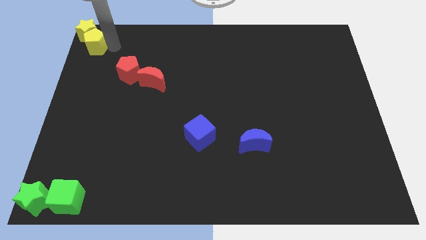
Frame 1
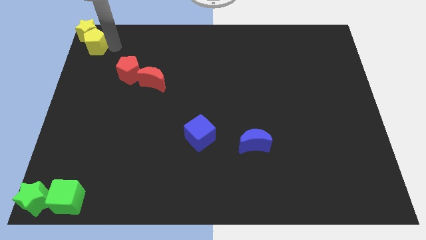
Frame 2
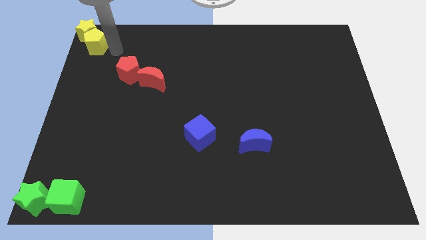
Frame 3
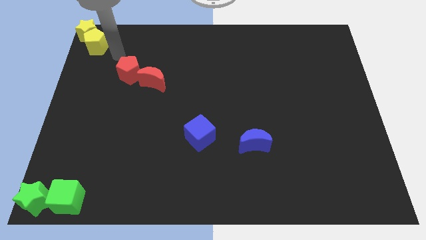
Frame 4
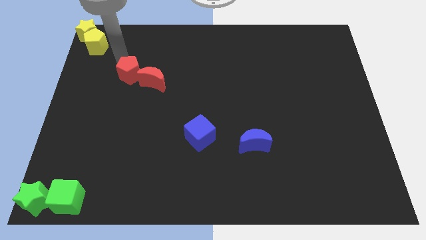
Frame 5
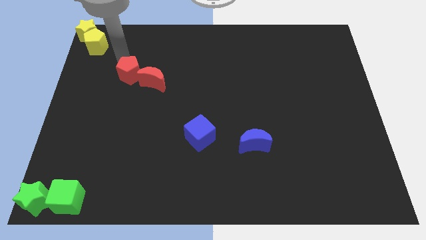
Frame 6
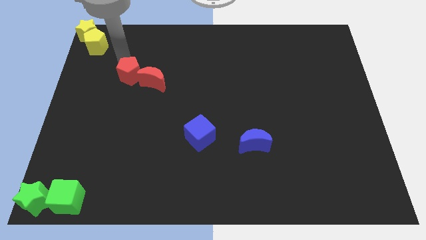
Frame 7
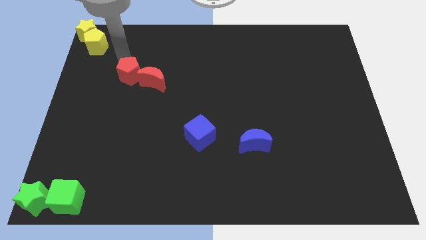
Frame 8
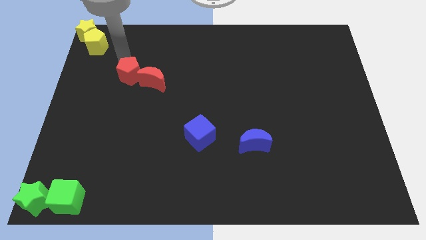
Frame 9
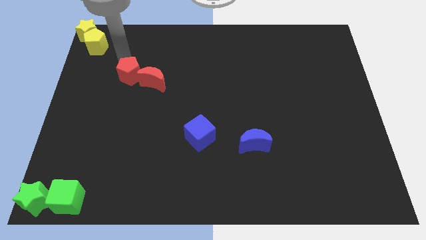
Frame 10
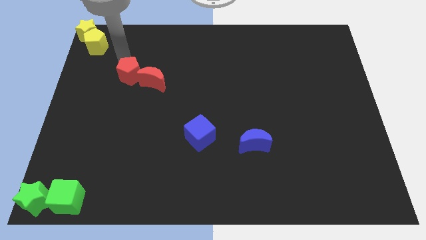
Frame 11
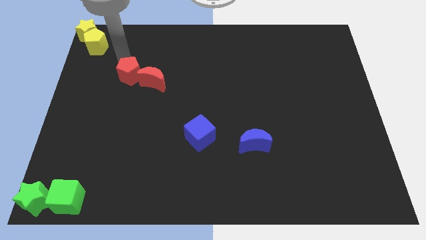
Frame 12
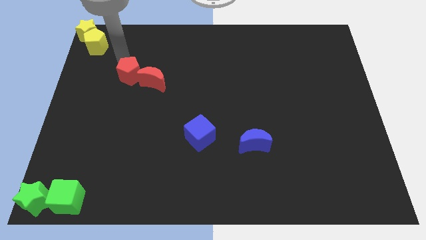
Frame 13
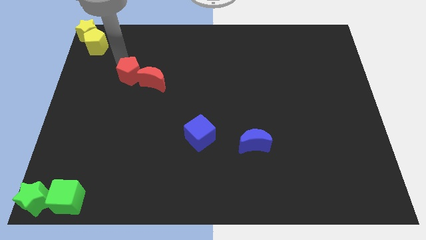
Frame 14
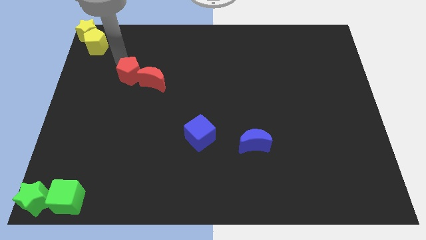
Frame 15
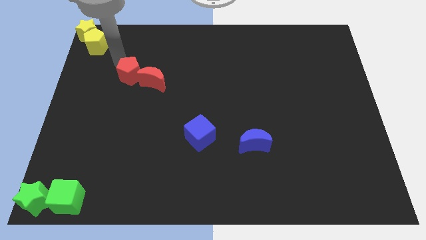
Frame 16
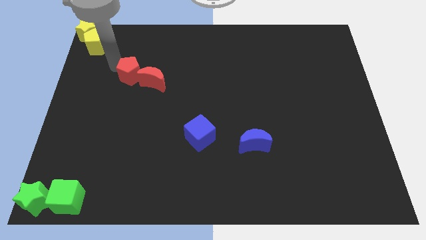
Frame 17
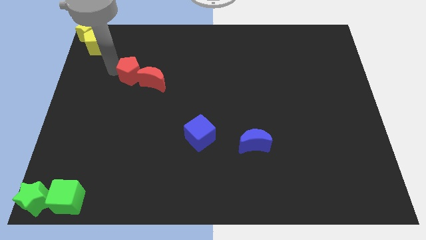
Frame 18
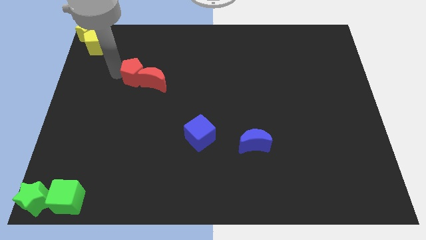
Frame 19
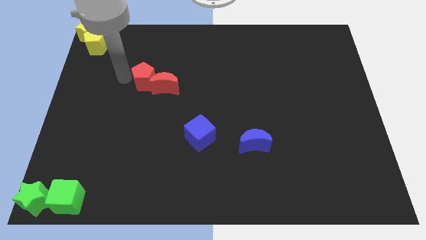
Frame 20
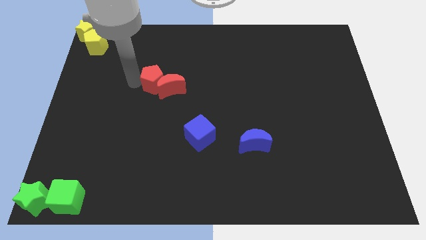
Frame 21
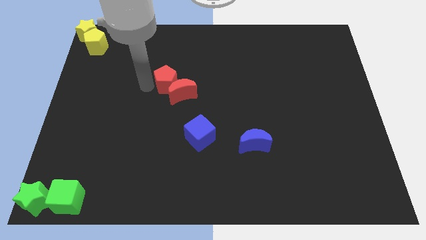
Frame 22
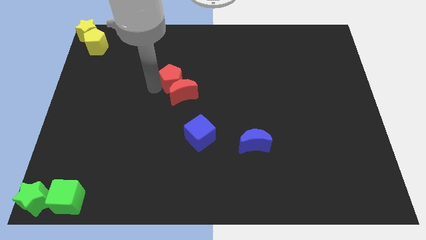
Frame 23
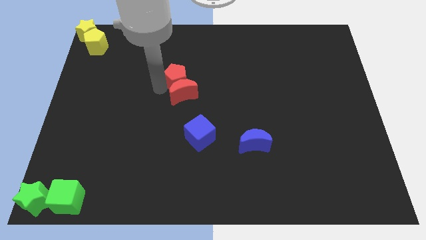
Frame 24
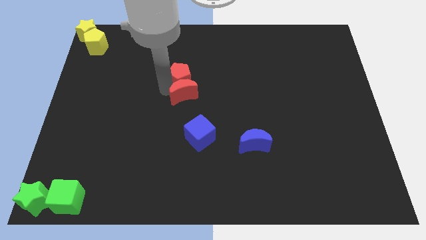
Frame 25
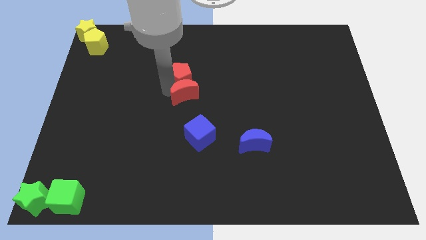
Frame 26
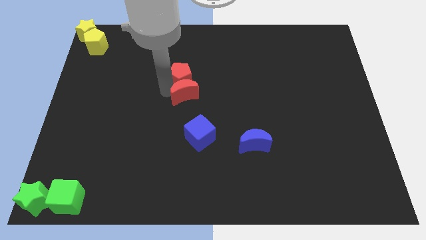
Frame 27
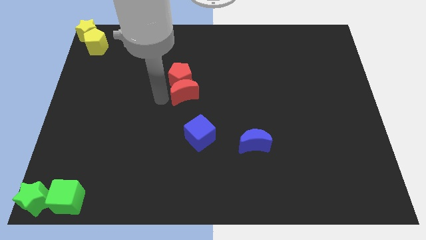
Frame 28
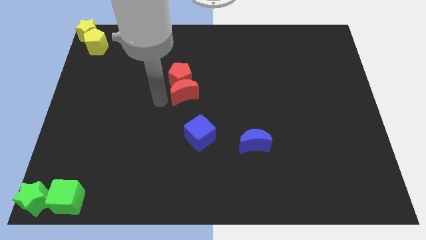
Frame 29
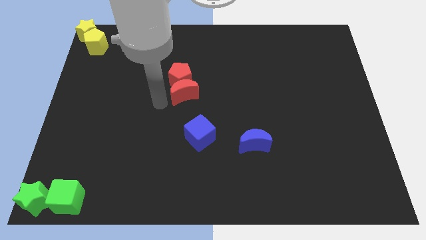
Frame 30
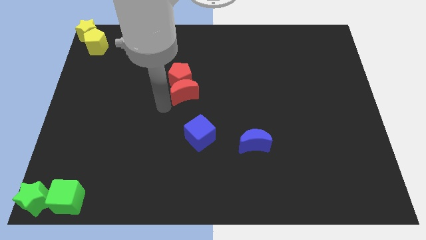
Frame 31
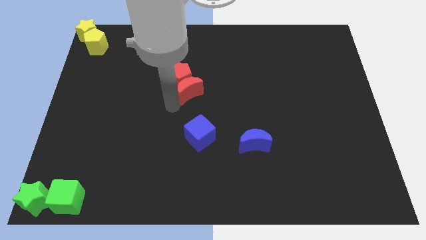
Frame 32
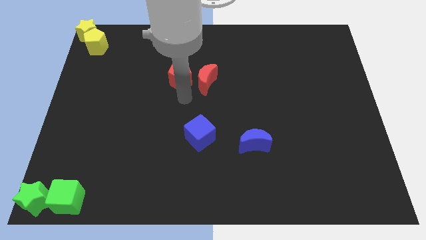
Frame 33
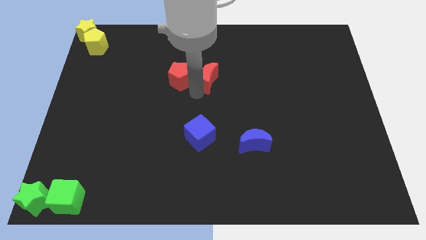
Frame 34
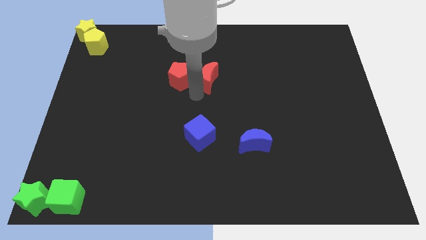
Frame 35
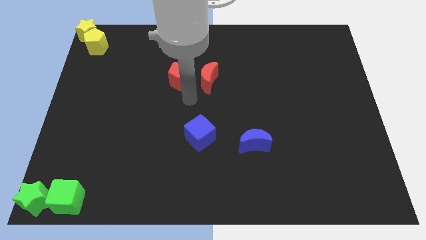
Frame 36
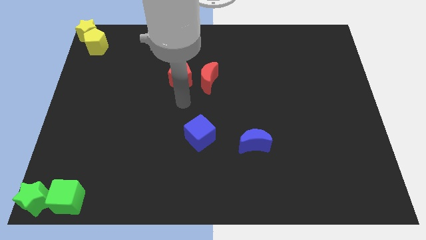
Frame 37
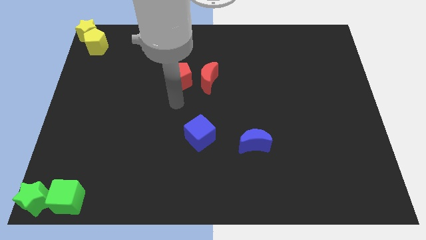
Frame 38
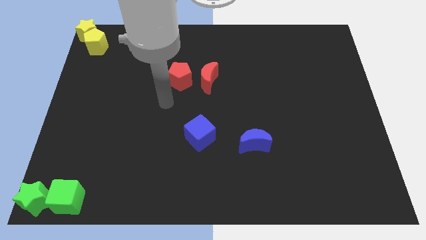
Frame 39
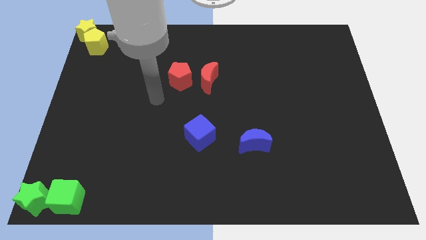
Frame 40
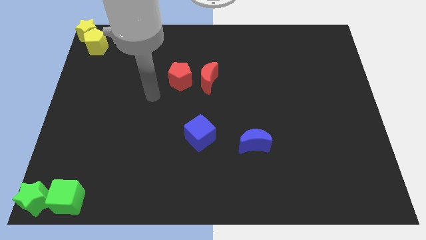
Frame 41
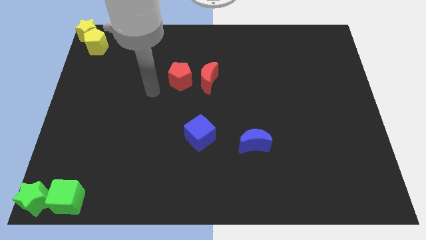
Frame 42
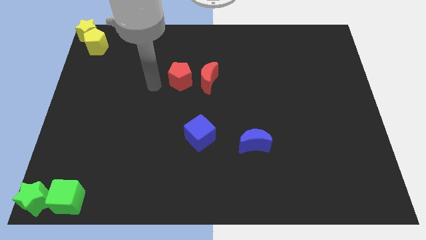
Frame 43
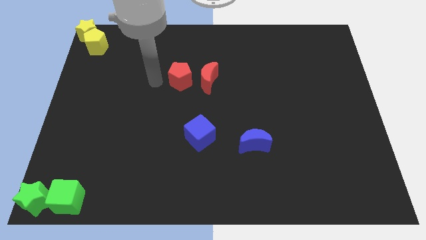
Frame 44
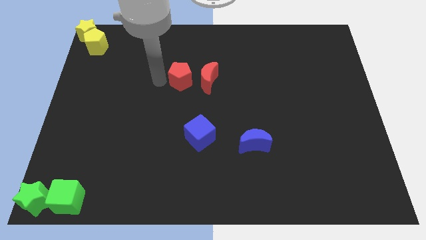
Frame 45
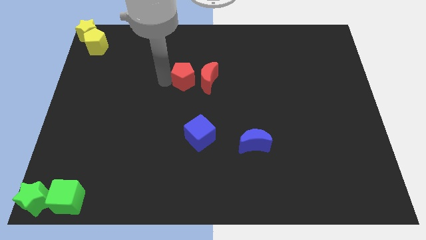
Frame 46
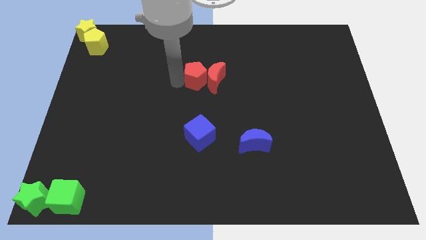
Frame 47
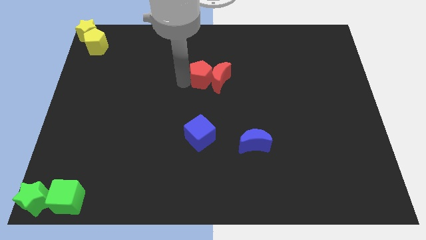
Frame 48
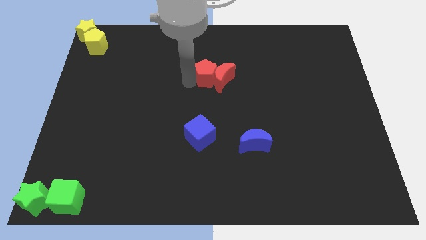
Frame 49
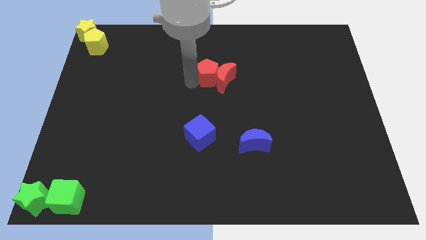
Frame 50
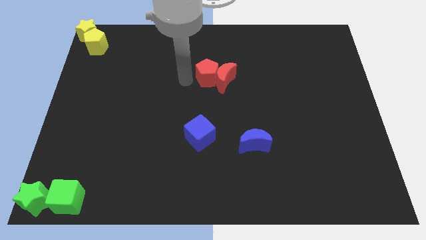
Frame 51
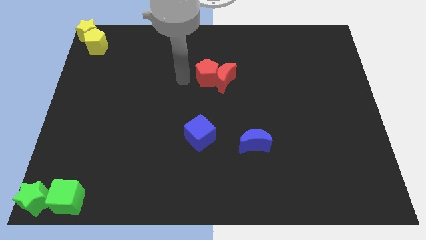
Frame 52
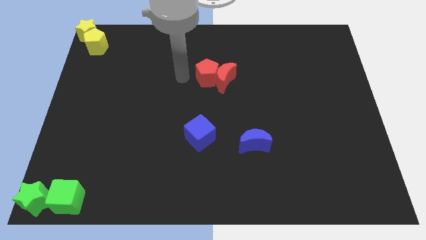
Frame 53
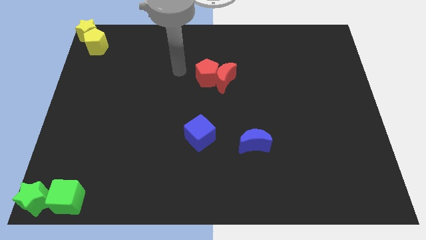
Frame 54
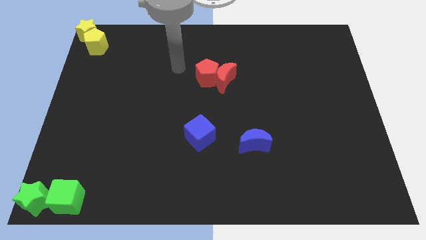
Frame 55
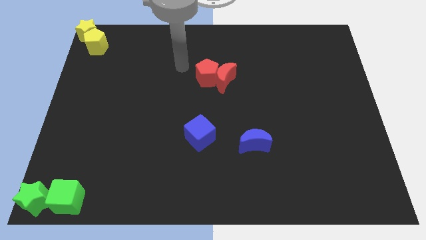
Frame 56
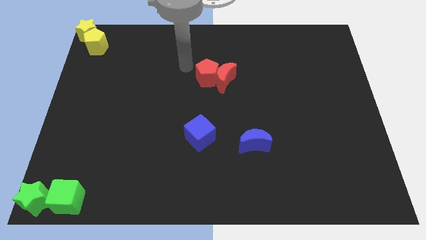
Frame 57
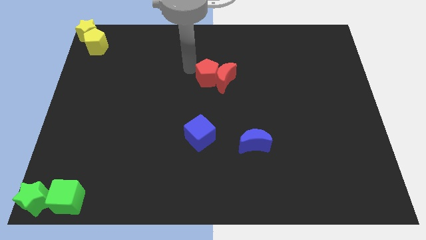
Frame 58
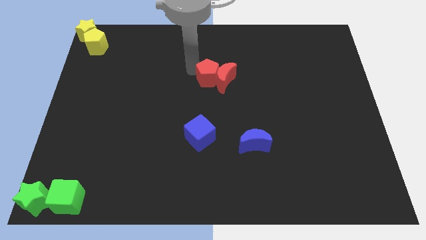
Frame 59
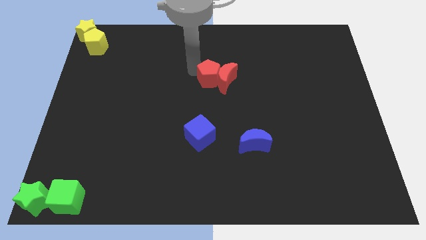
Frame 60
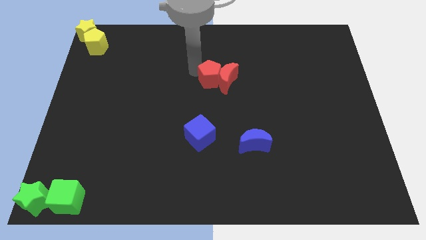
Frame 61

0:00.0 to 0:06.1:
push the red blocks to the center

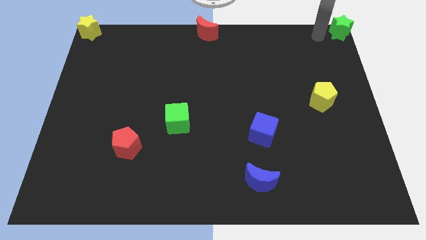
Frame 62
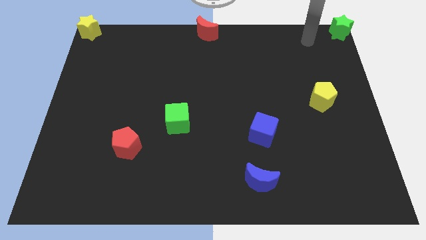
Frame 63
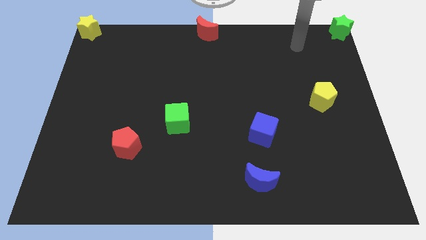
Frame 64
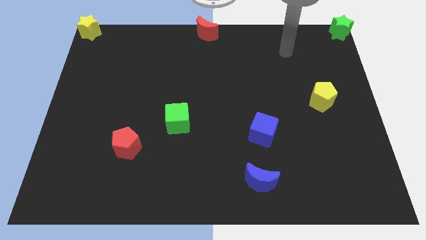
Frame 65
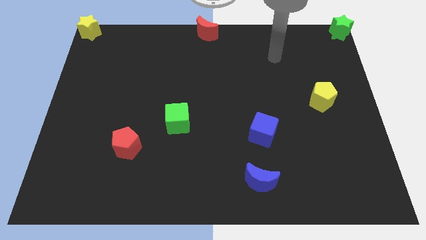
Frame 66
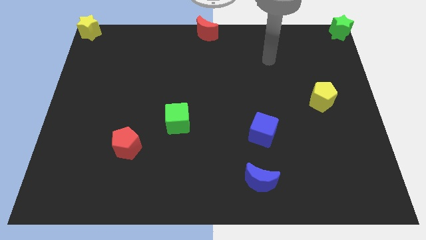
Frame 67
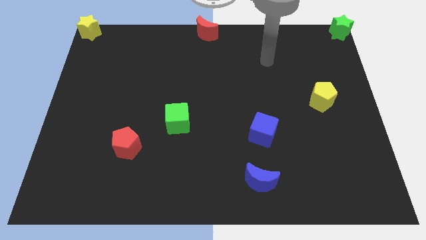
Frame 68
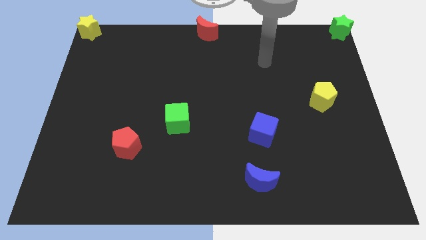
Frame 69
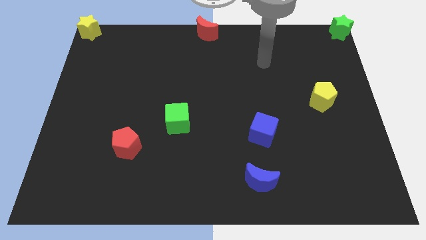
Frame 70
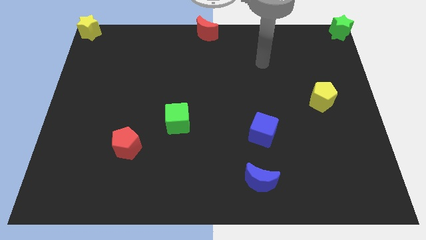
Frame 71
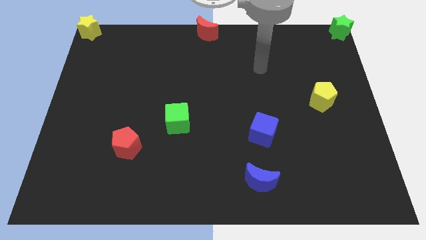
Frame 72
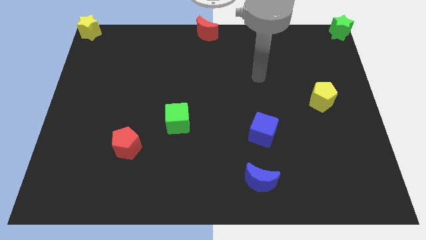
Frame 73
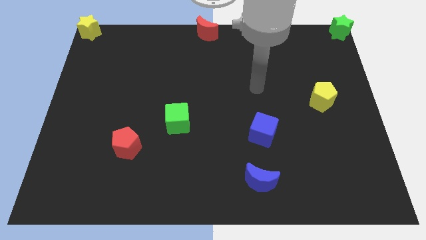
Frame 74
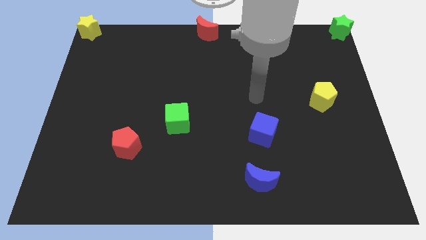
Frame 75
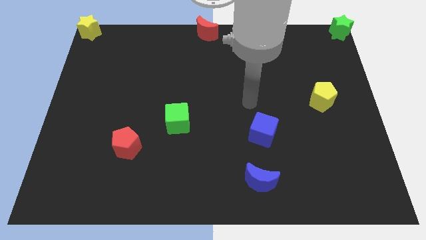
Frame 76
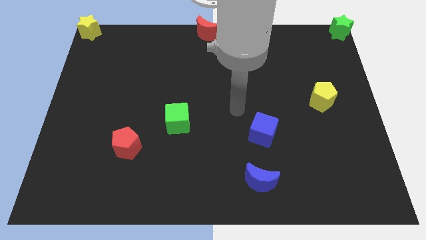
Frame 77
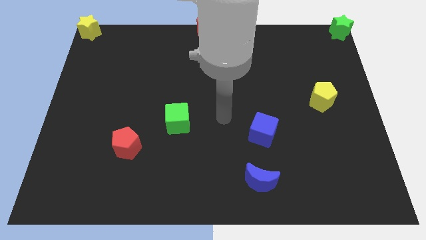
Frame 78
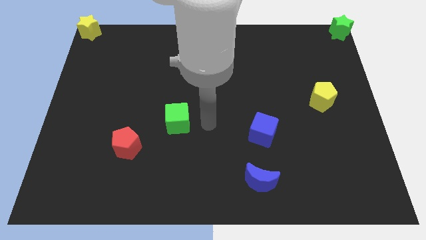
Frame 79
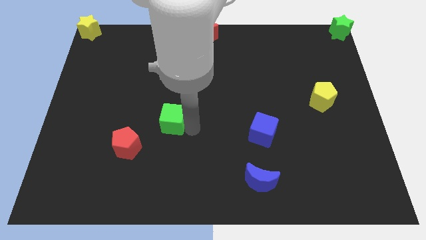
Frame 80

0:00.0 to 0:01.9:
put your arm from top right to diagonally towards the green cube

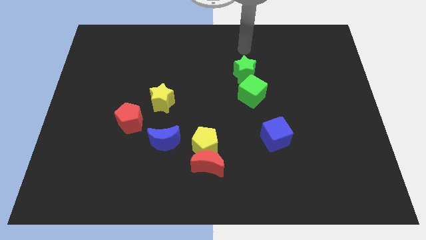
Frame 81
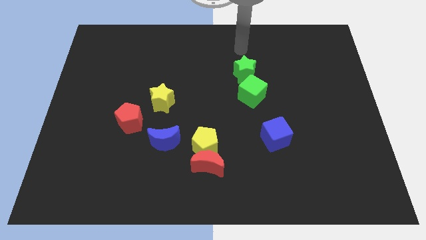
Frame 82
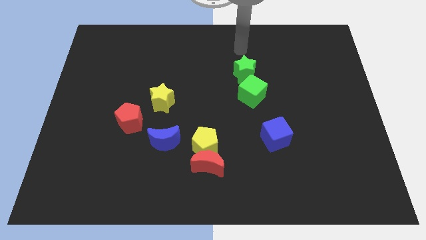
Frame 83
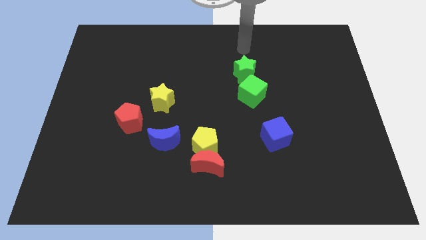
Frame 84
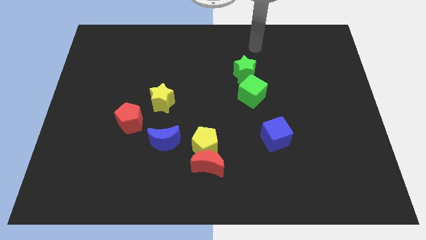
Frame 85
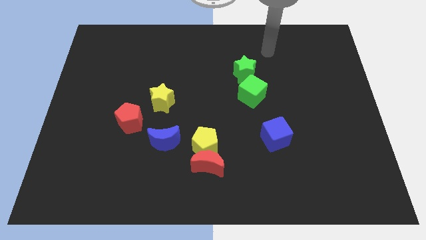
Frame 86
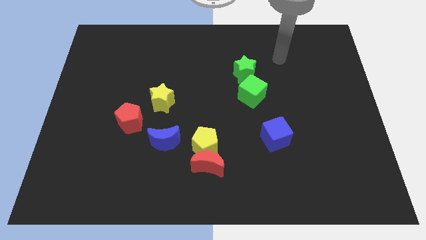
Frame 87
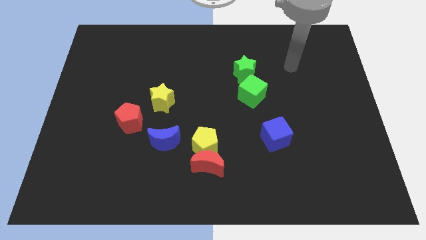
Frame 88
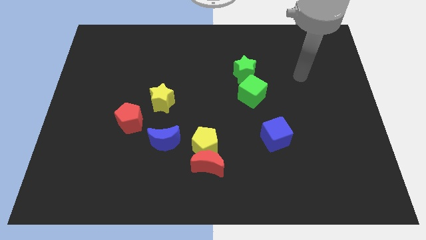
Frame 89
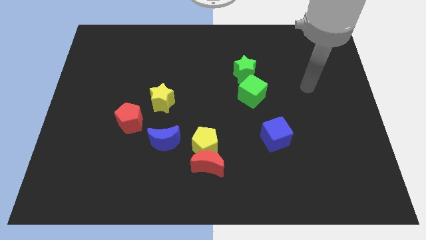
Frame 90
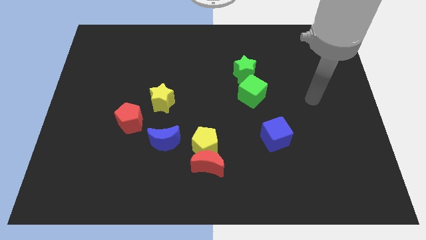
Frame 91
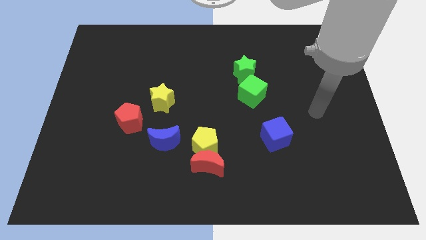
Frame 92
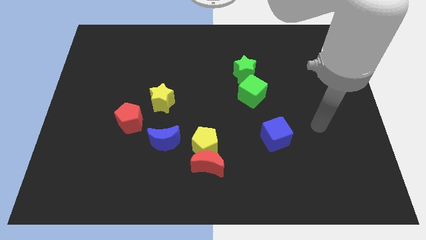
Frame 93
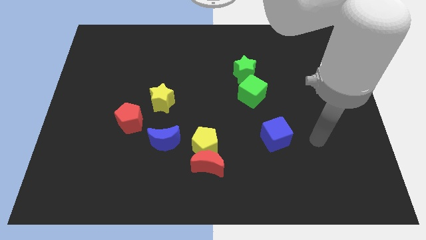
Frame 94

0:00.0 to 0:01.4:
point your arm right to the blue cube
